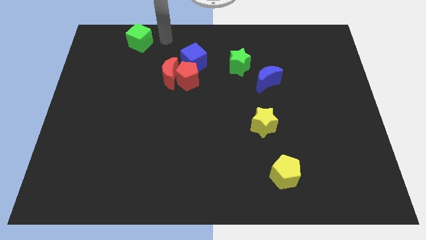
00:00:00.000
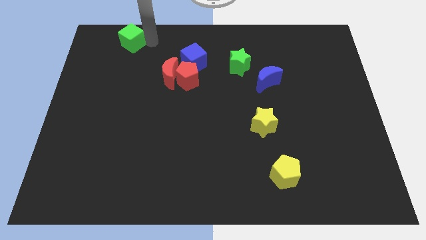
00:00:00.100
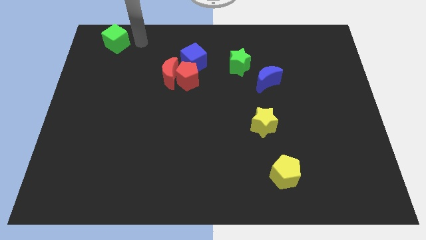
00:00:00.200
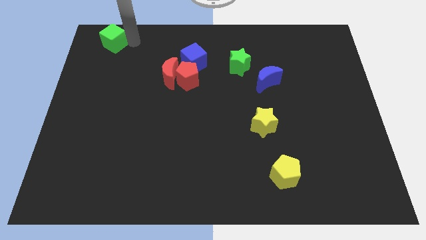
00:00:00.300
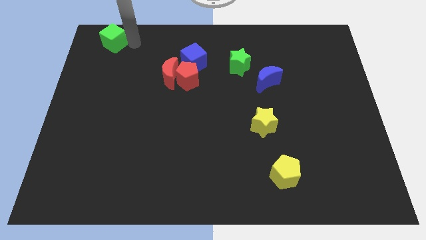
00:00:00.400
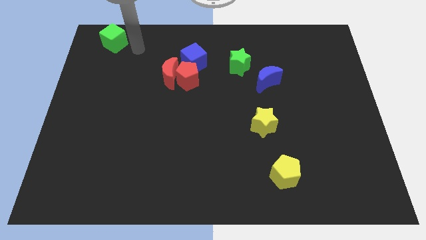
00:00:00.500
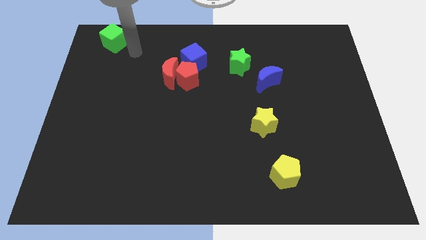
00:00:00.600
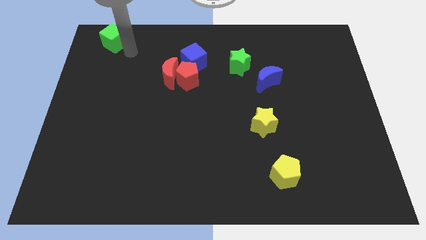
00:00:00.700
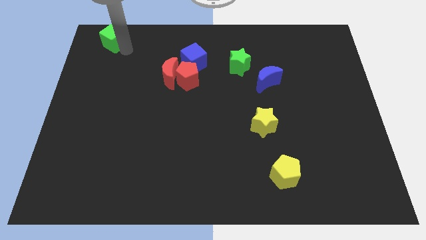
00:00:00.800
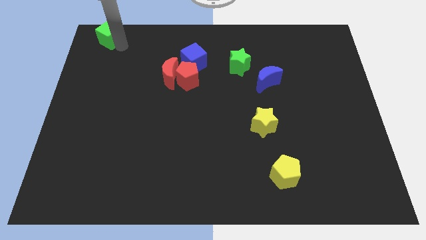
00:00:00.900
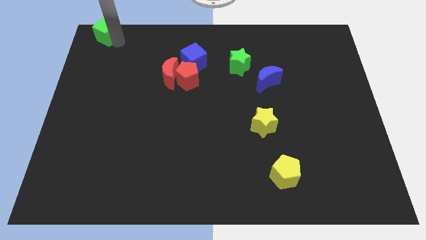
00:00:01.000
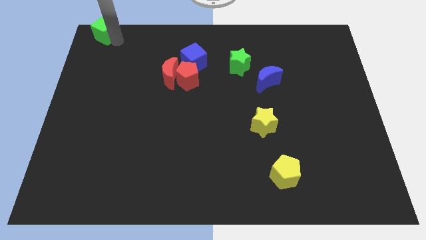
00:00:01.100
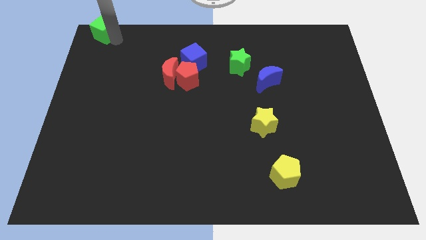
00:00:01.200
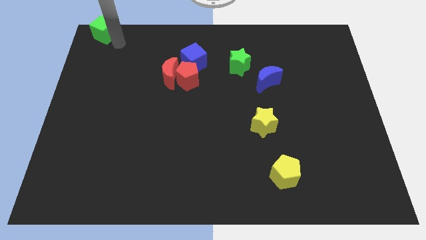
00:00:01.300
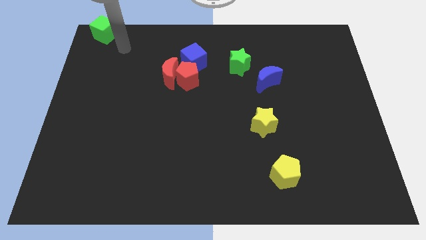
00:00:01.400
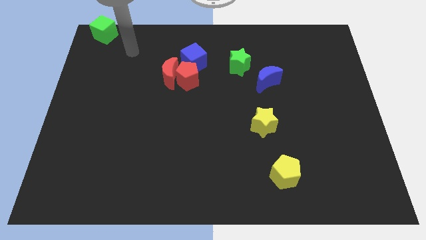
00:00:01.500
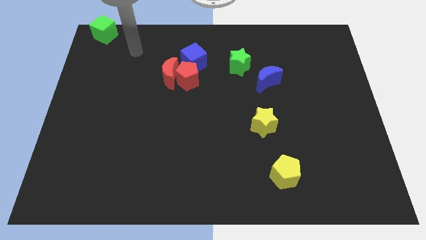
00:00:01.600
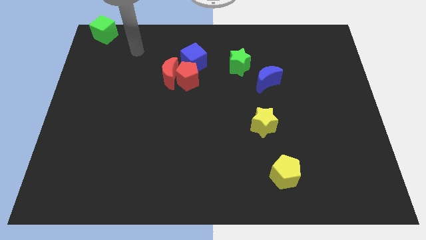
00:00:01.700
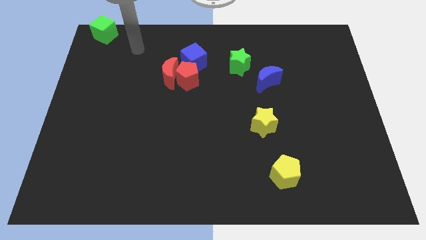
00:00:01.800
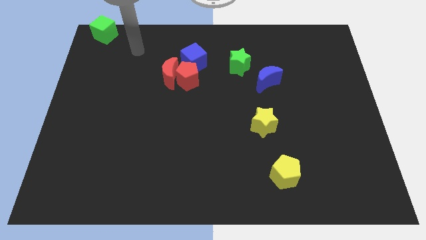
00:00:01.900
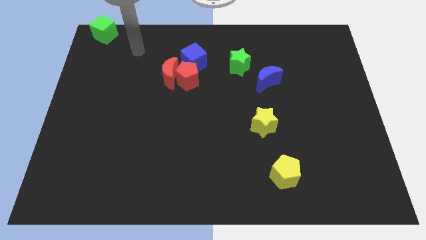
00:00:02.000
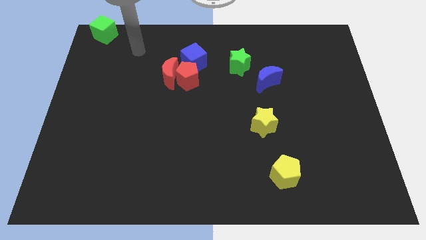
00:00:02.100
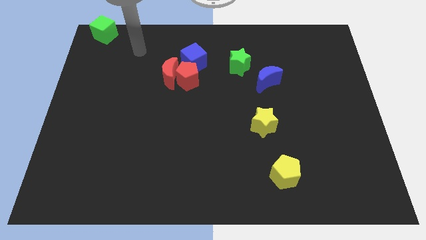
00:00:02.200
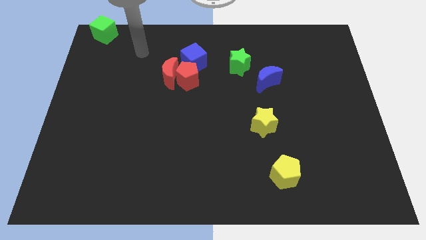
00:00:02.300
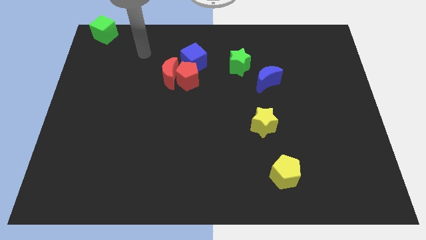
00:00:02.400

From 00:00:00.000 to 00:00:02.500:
move the green cube towards top left corner of the board

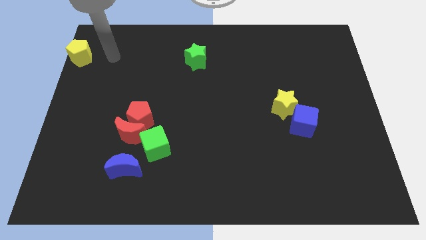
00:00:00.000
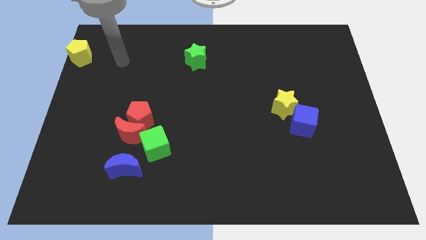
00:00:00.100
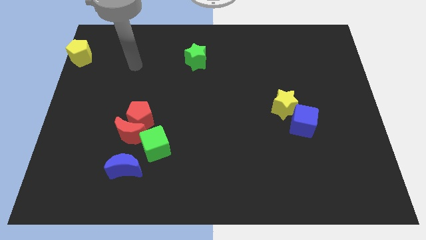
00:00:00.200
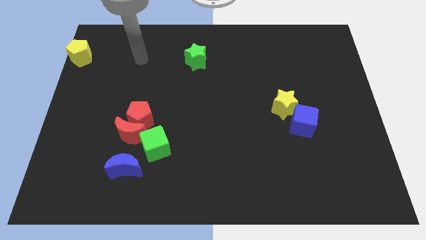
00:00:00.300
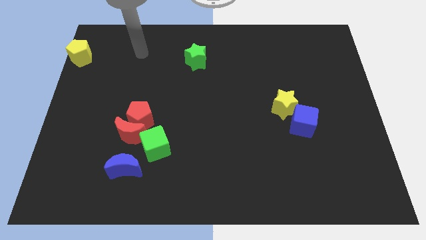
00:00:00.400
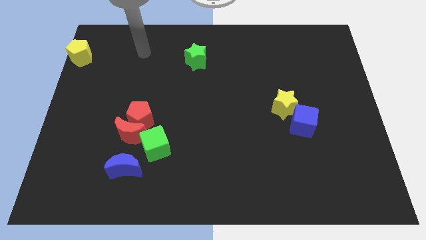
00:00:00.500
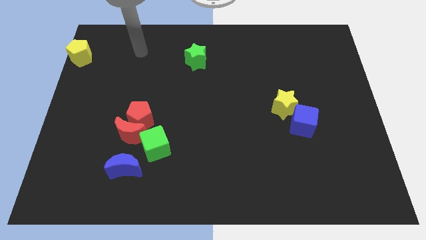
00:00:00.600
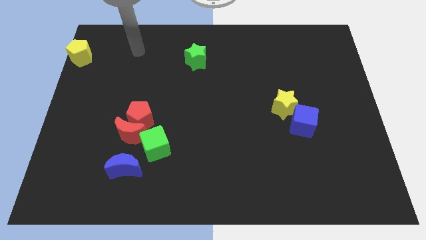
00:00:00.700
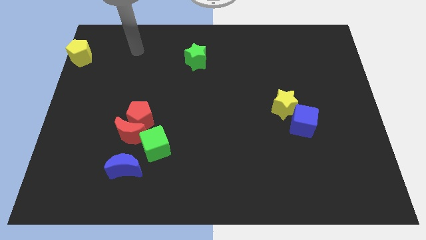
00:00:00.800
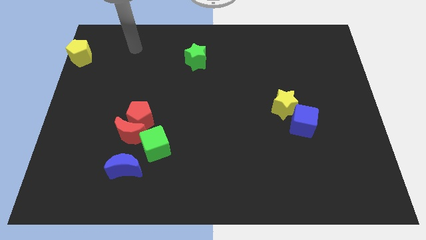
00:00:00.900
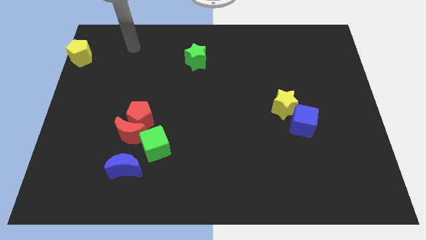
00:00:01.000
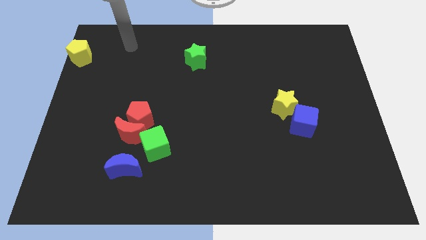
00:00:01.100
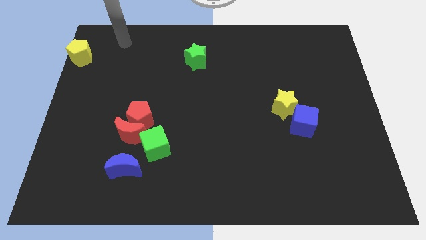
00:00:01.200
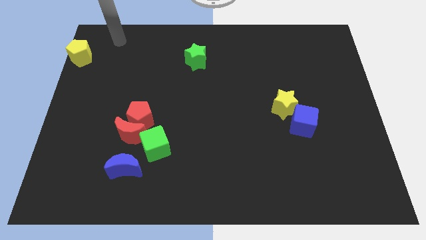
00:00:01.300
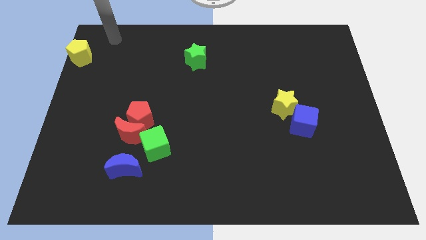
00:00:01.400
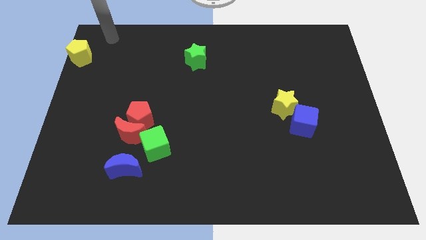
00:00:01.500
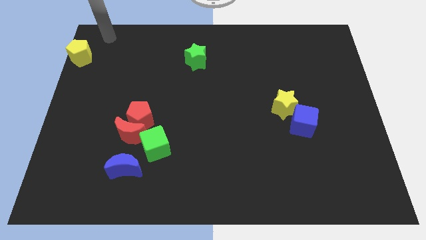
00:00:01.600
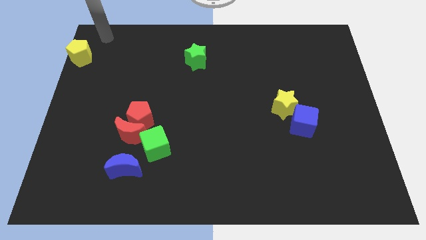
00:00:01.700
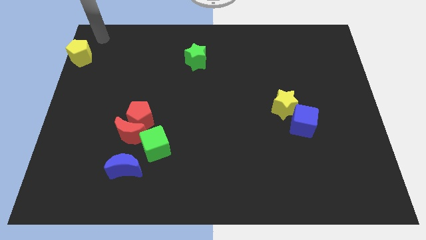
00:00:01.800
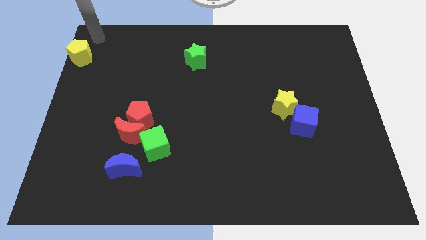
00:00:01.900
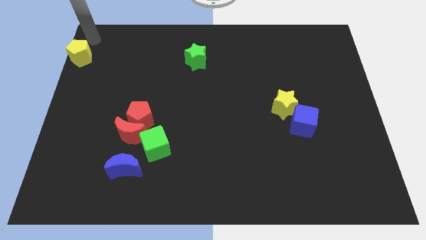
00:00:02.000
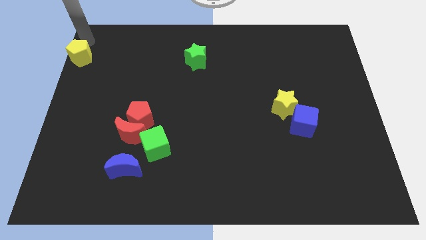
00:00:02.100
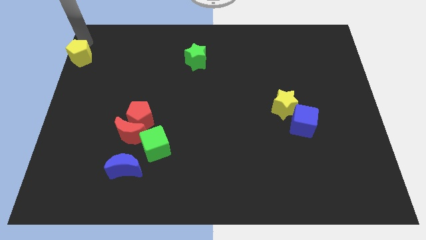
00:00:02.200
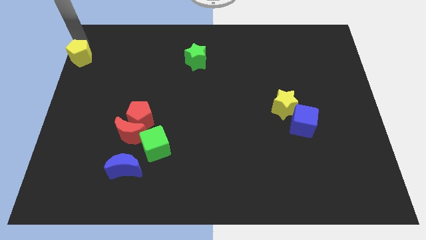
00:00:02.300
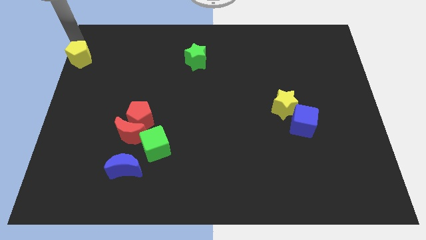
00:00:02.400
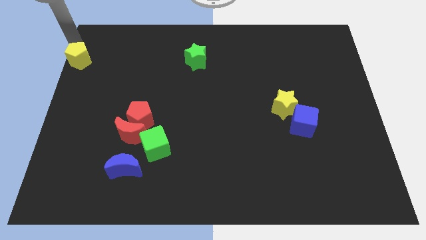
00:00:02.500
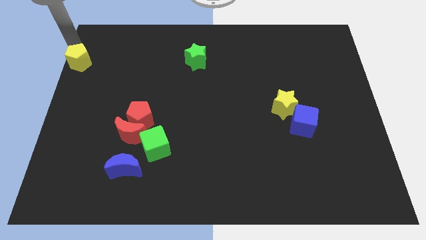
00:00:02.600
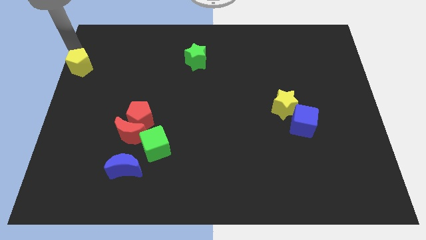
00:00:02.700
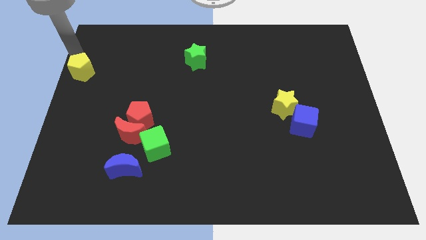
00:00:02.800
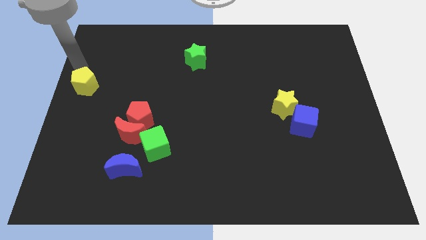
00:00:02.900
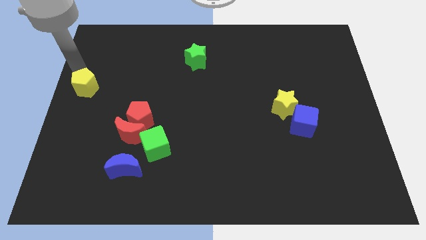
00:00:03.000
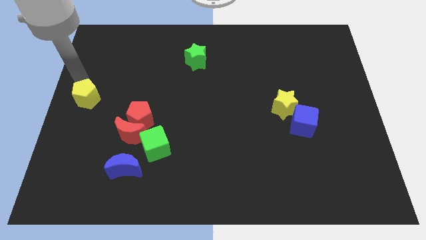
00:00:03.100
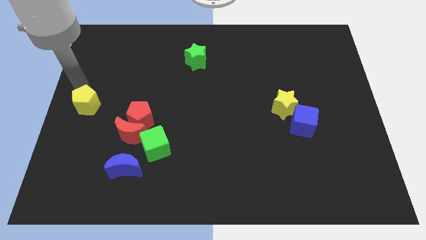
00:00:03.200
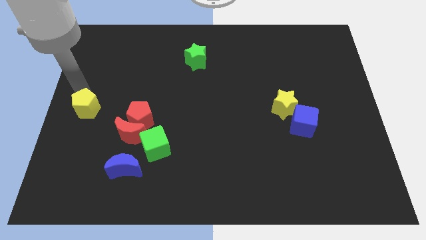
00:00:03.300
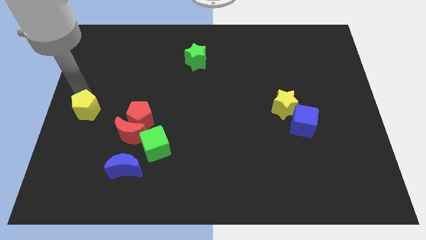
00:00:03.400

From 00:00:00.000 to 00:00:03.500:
place the yellow pentagon left to the red pentagon

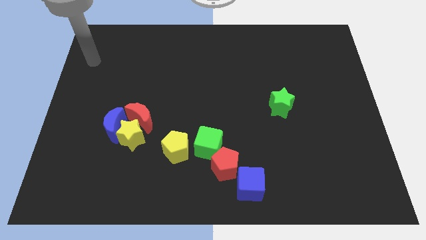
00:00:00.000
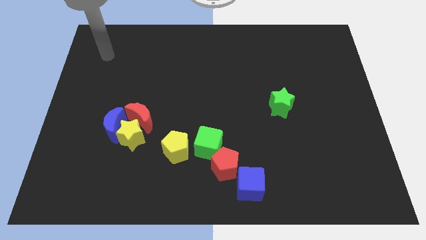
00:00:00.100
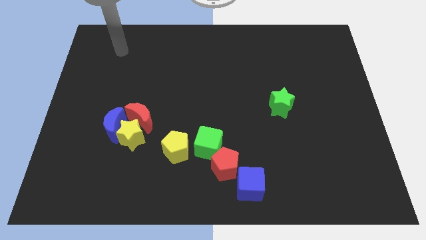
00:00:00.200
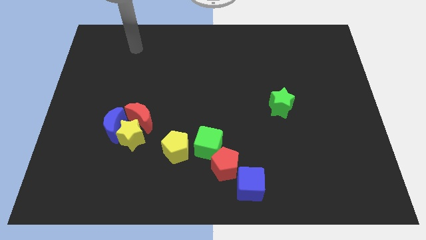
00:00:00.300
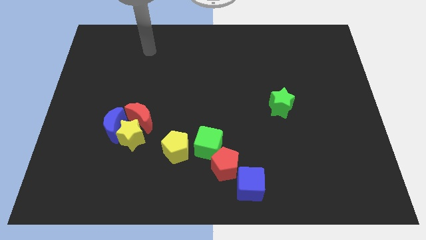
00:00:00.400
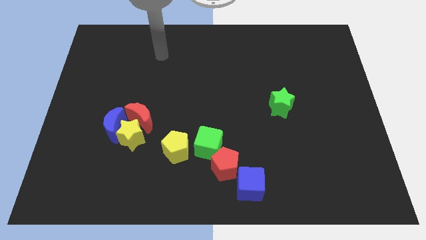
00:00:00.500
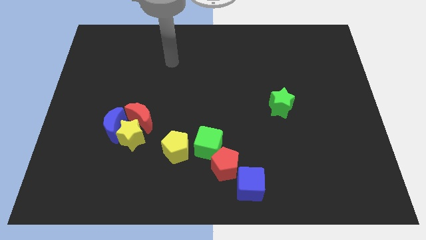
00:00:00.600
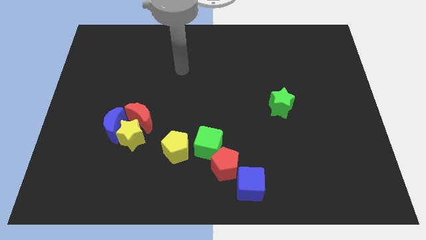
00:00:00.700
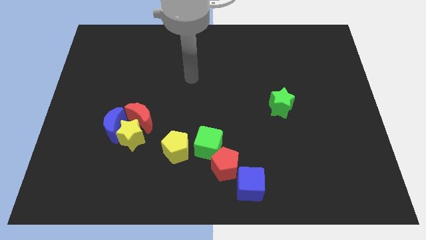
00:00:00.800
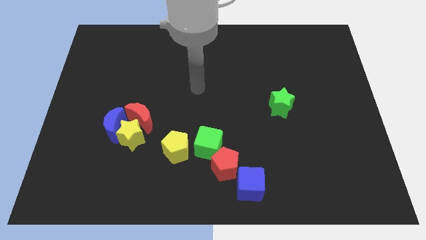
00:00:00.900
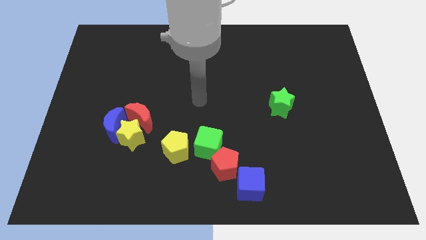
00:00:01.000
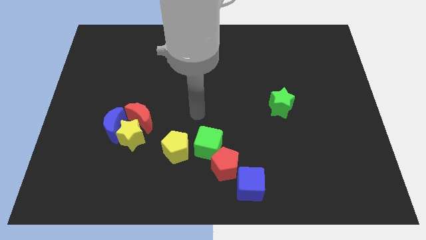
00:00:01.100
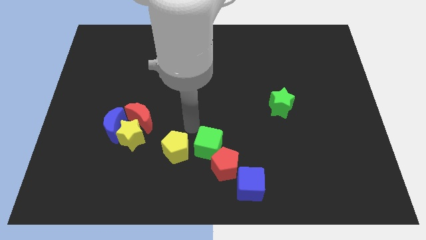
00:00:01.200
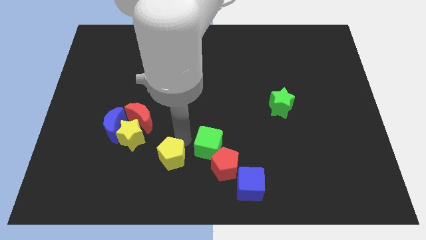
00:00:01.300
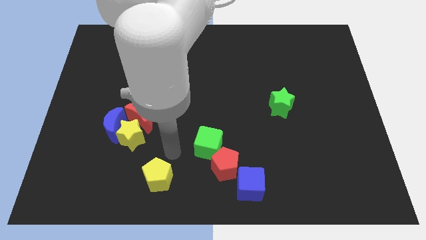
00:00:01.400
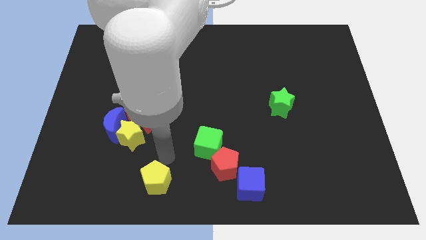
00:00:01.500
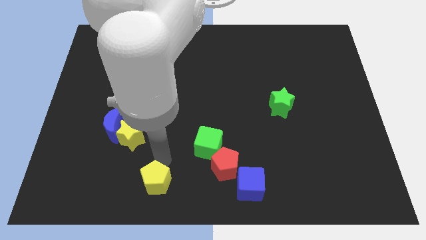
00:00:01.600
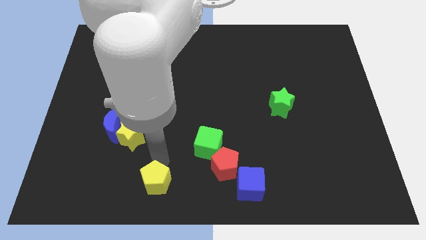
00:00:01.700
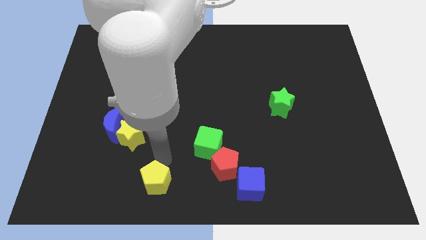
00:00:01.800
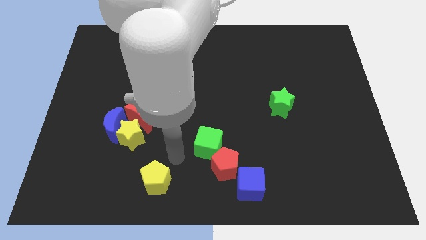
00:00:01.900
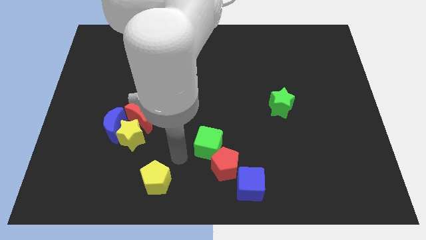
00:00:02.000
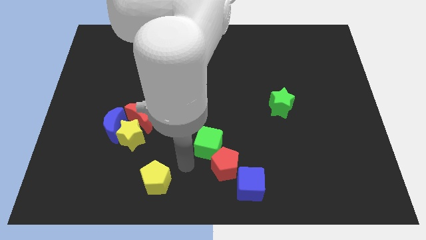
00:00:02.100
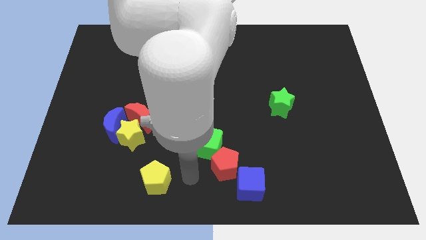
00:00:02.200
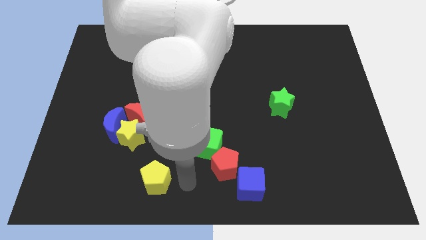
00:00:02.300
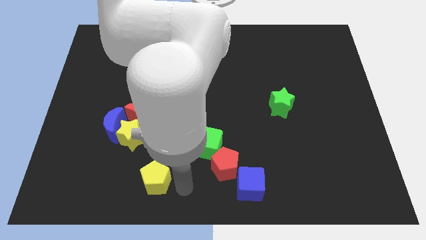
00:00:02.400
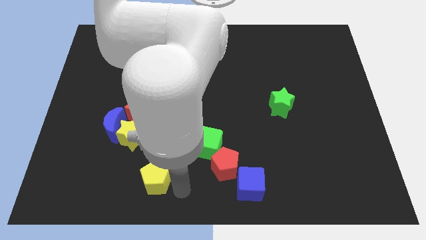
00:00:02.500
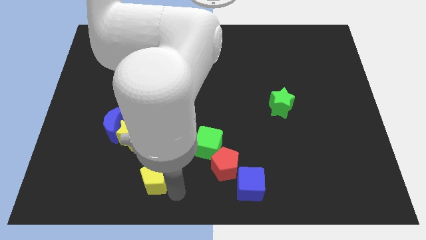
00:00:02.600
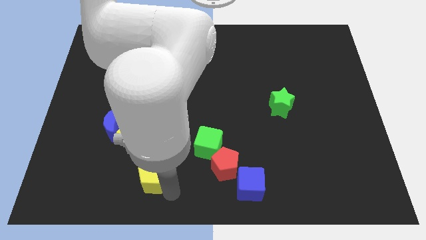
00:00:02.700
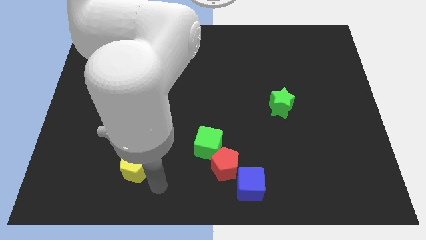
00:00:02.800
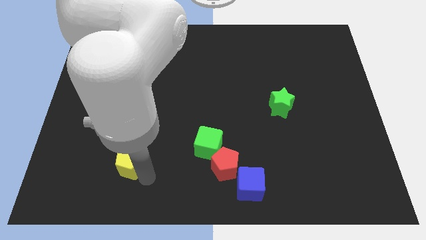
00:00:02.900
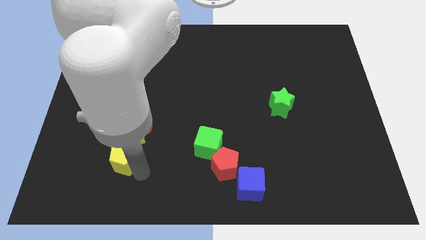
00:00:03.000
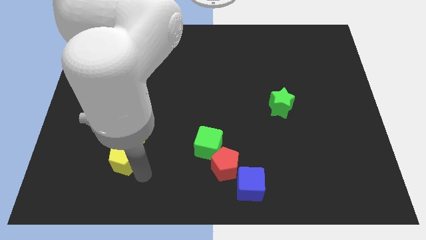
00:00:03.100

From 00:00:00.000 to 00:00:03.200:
place the yellow pentagon below the yellow star
